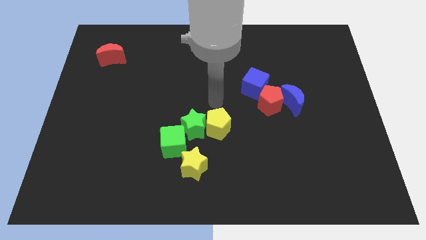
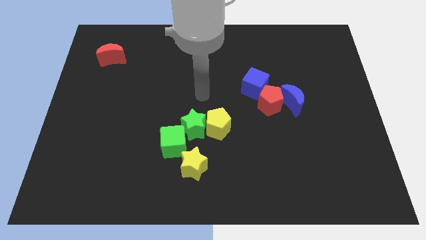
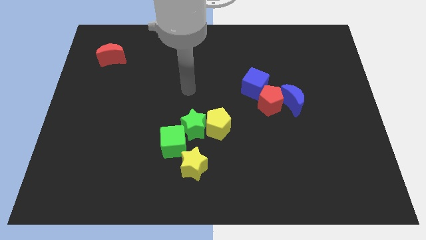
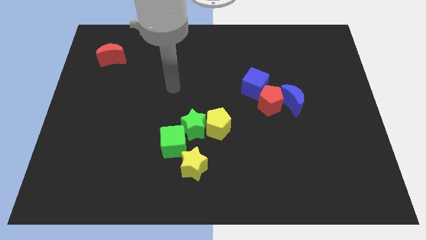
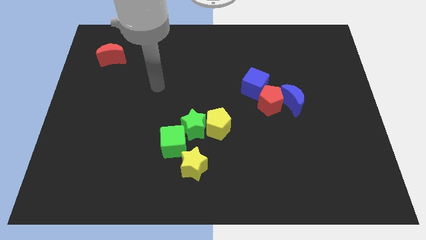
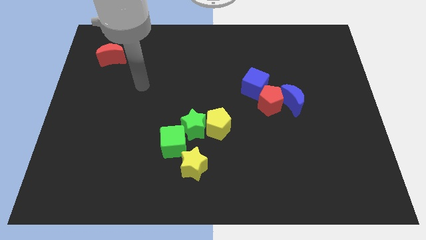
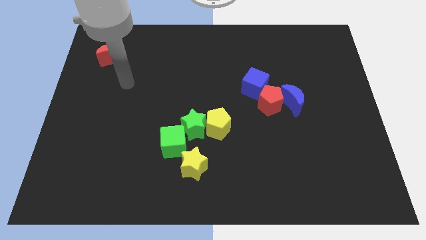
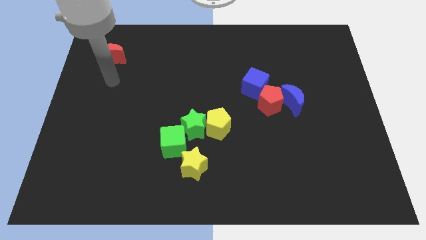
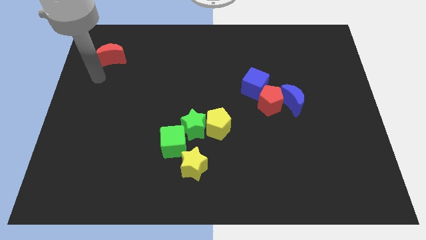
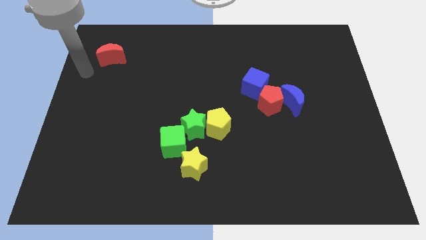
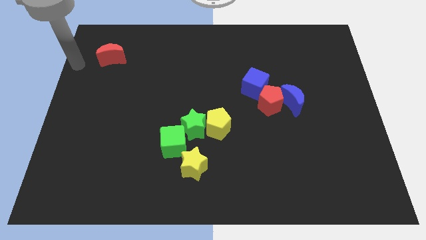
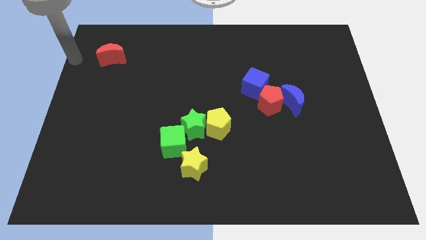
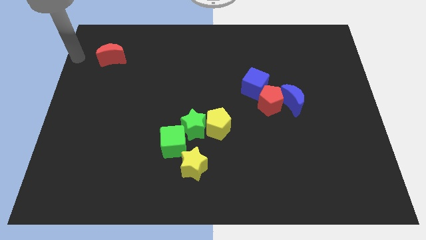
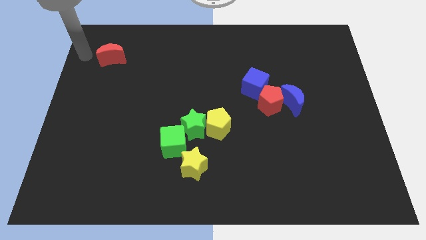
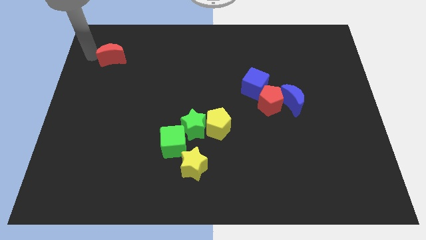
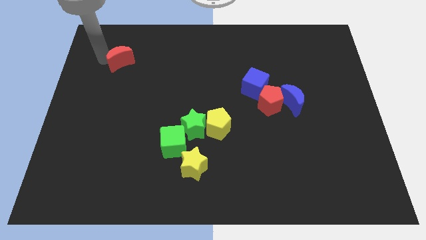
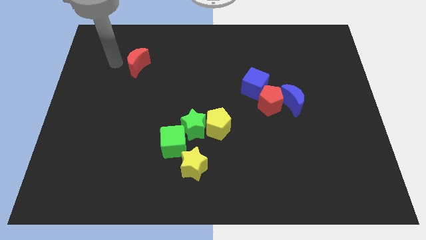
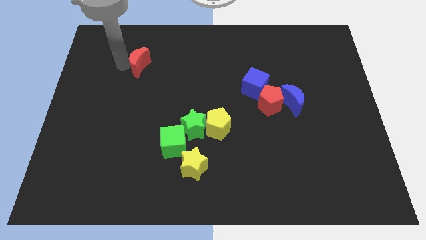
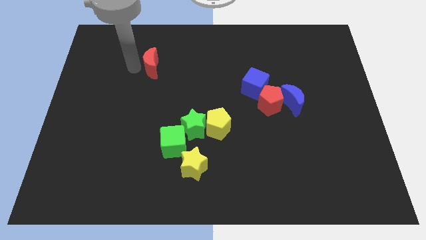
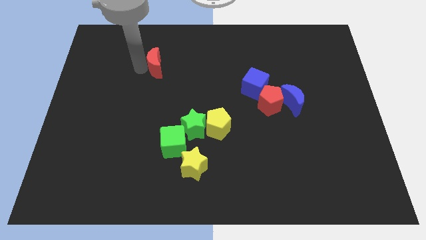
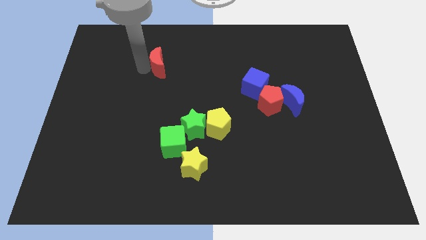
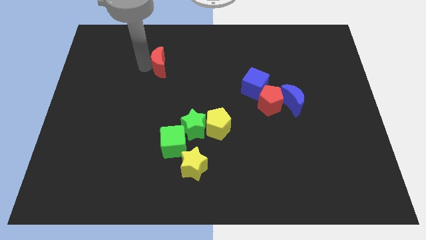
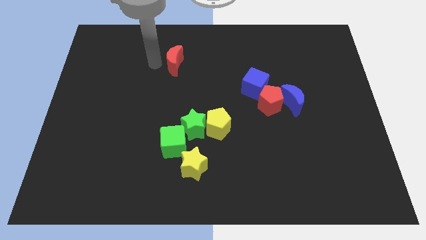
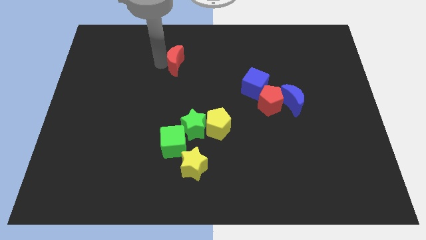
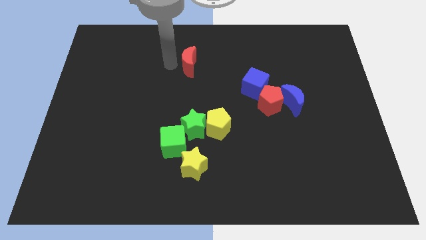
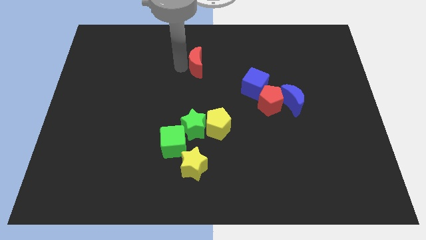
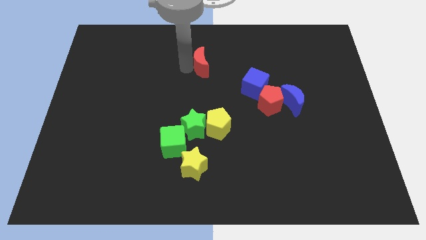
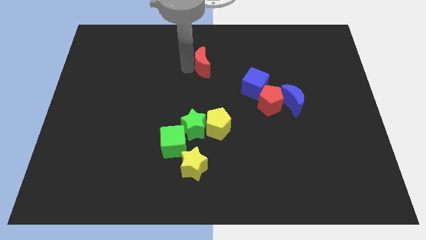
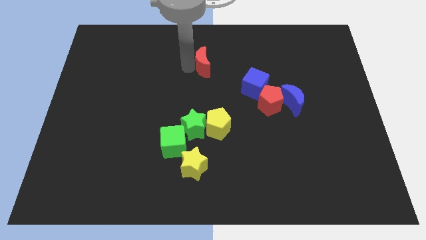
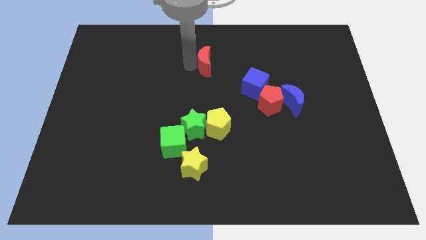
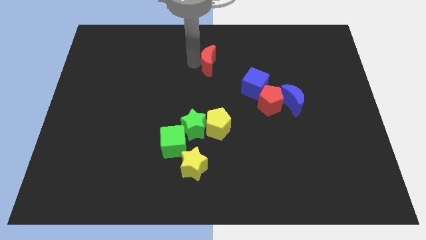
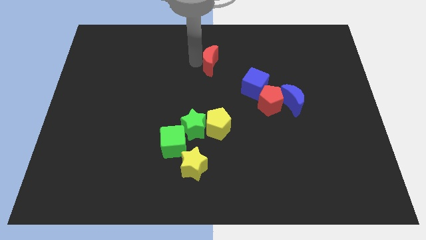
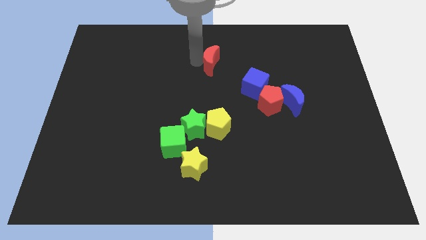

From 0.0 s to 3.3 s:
put the red moon diagonally top right to the green star

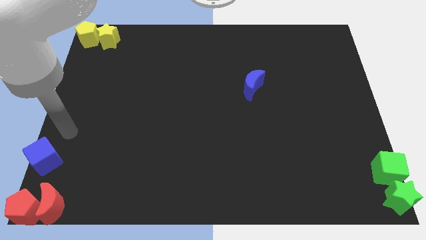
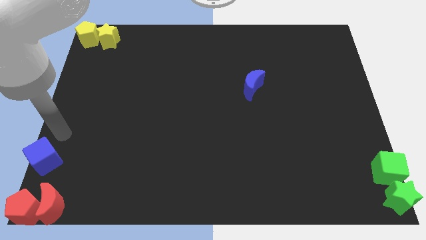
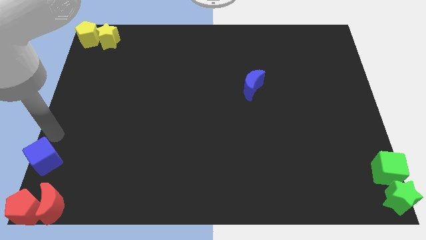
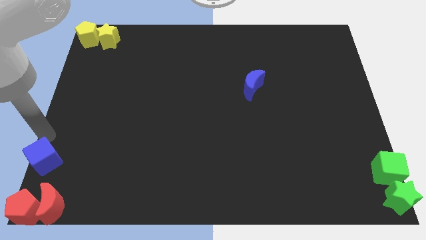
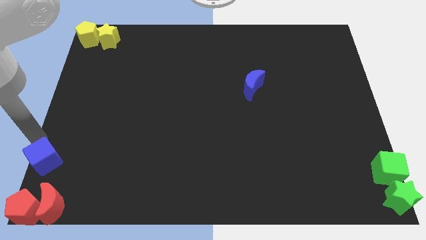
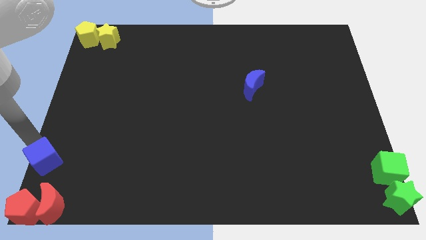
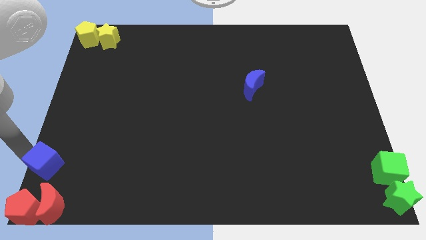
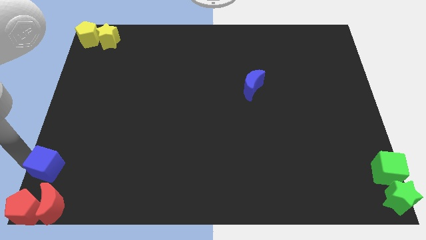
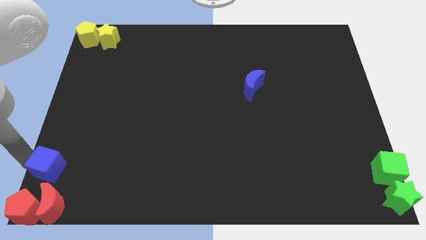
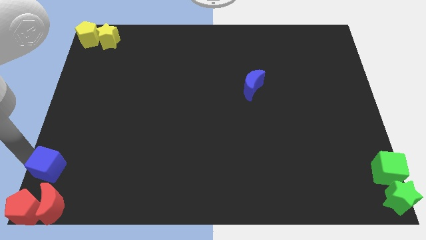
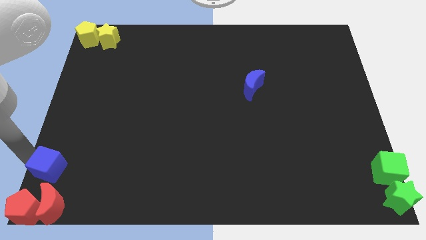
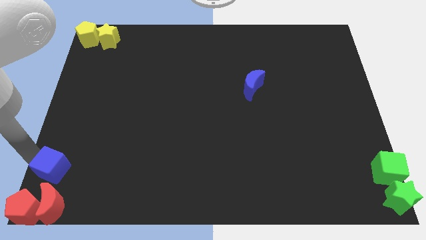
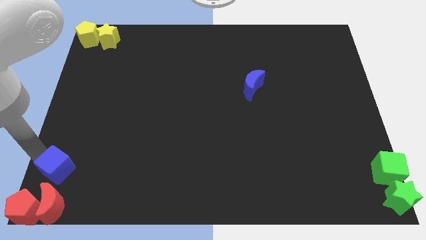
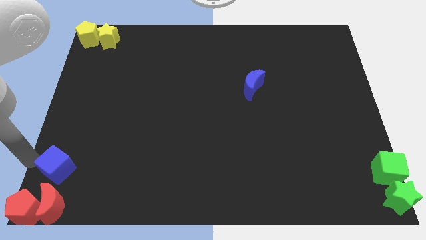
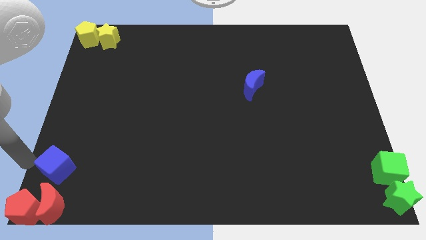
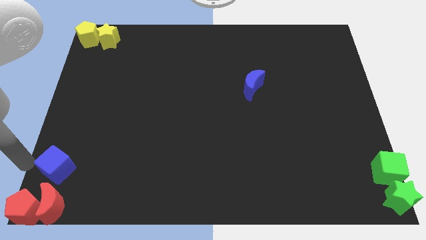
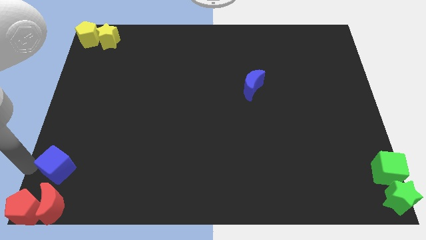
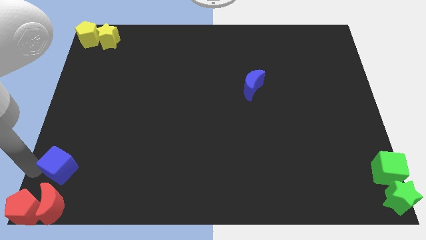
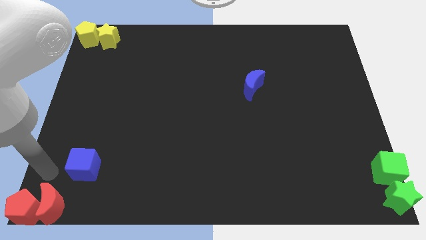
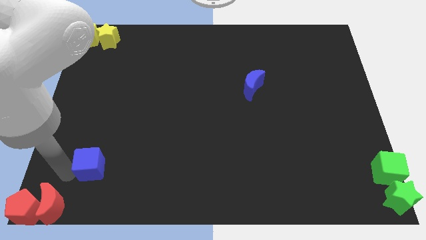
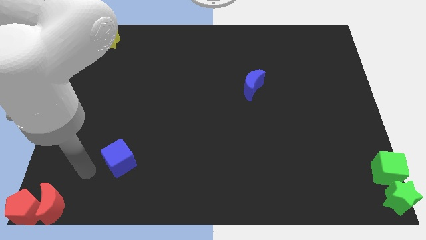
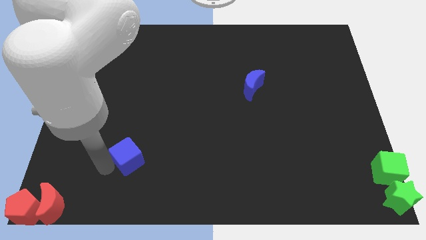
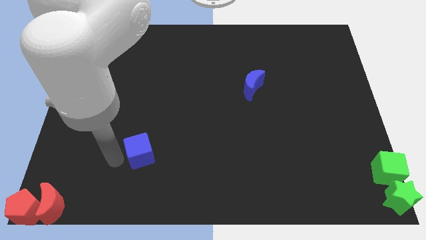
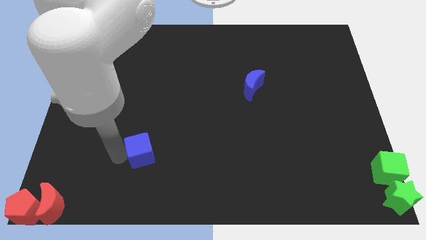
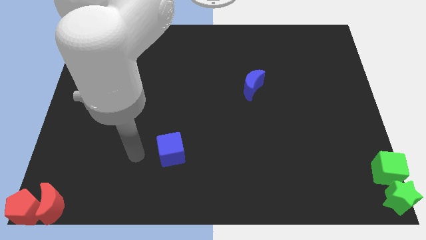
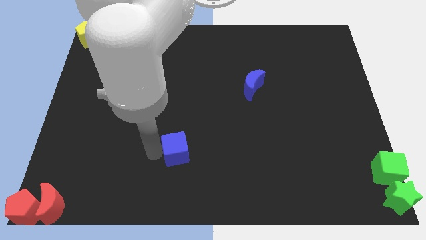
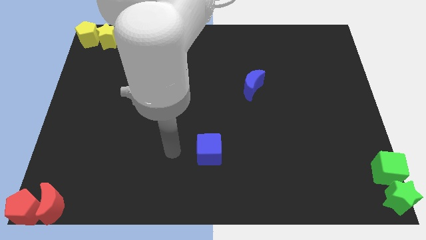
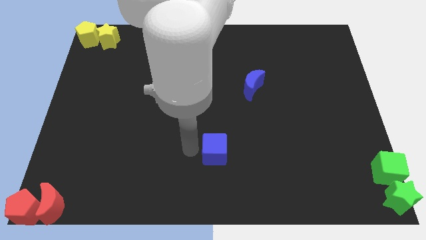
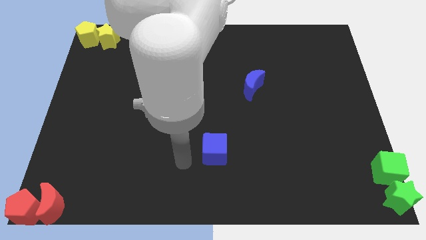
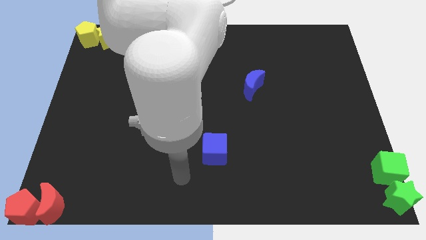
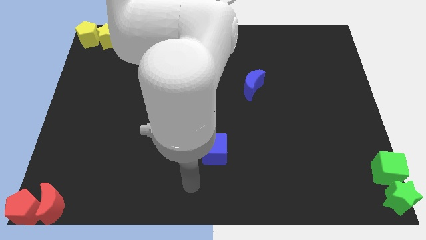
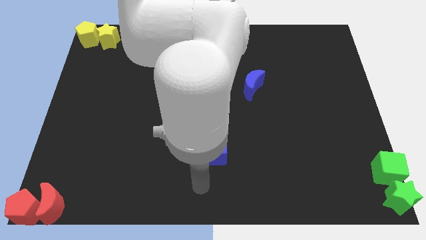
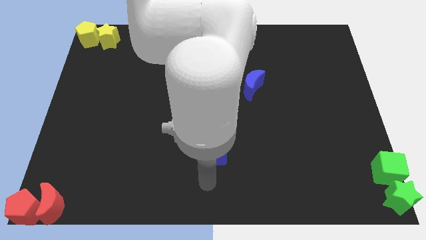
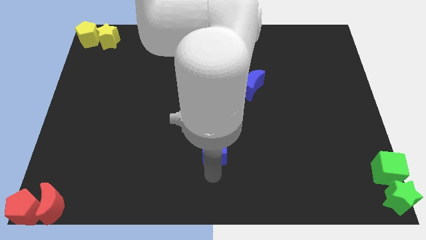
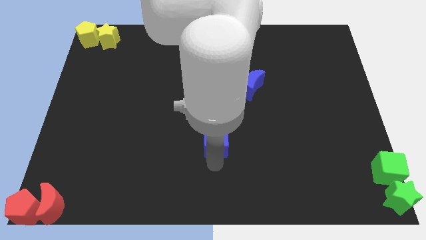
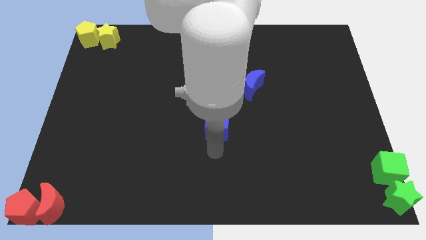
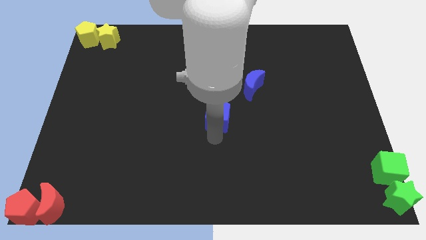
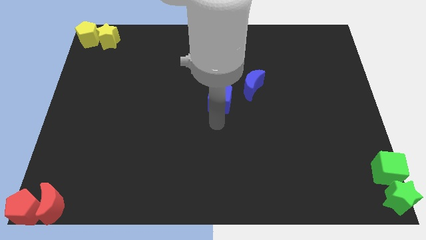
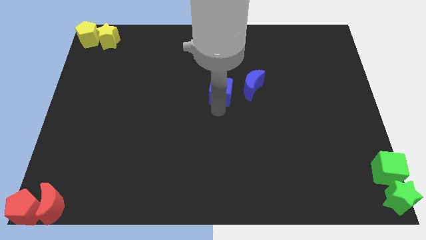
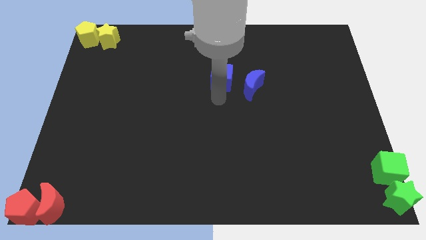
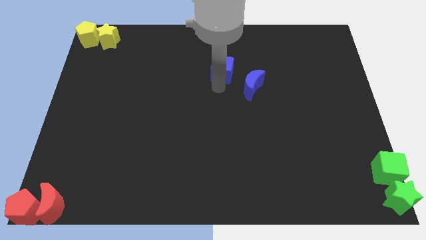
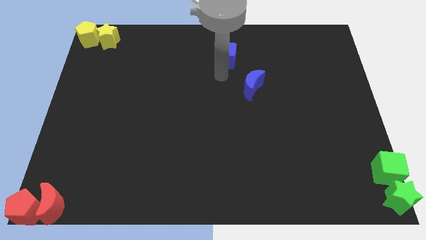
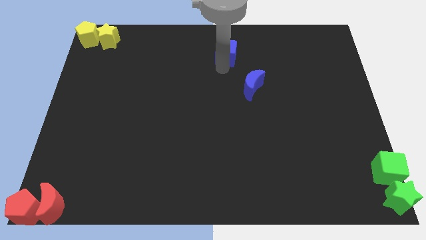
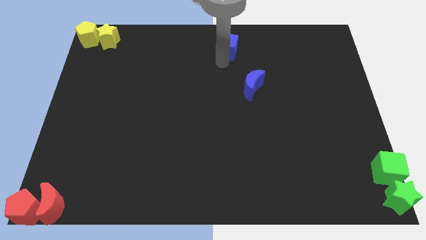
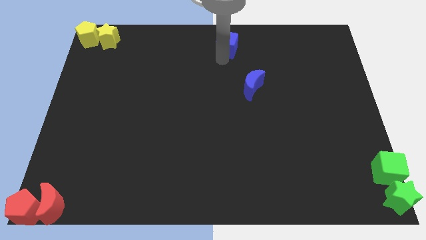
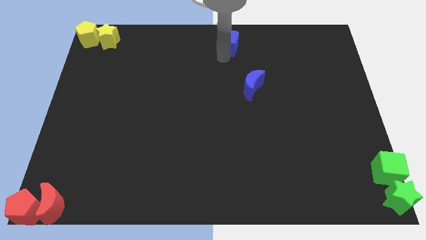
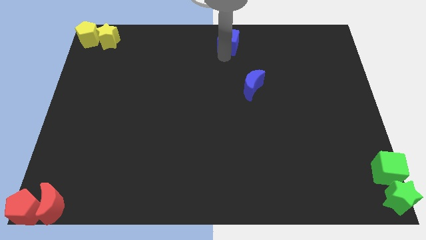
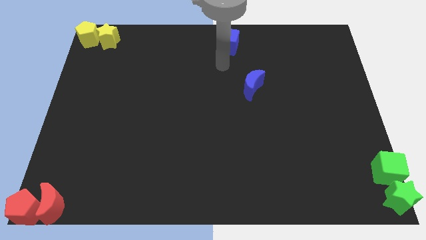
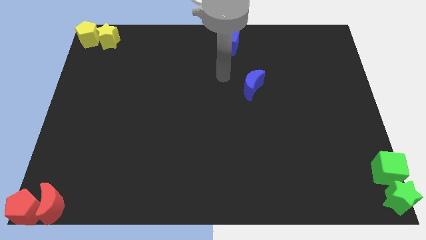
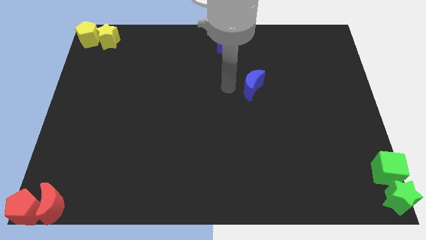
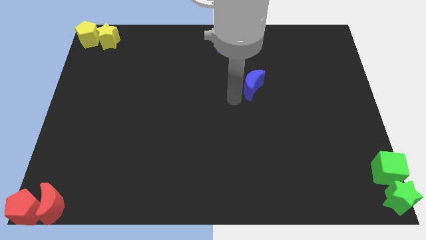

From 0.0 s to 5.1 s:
push the blue cube to the top center of the board

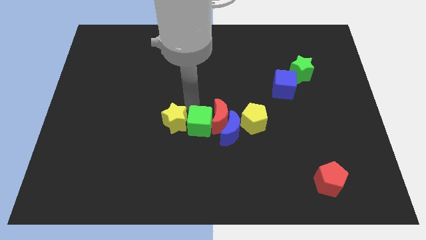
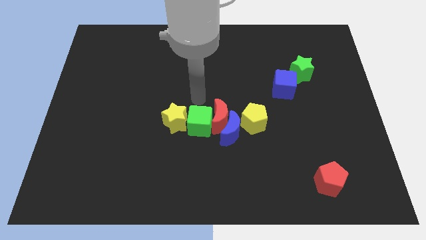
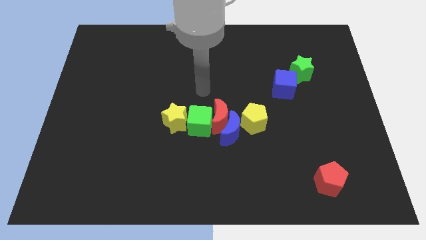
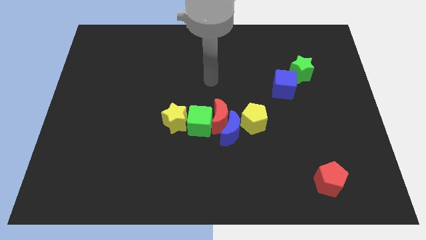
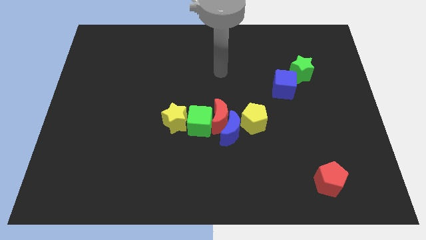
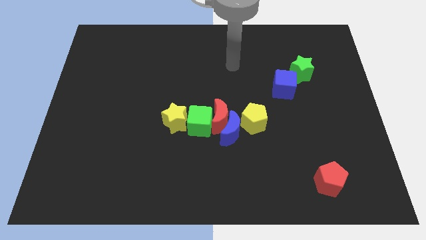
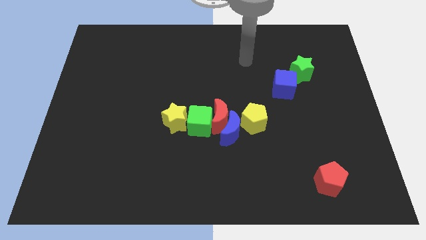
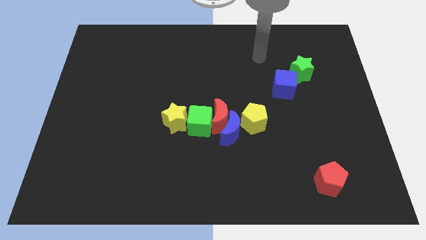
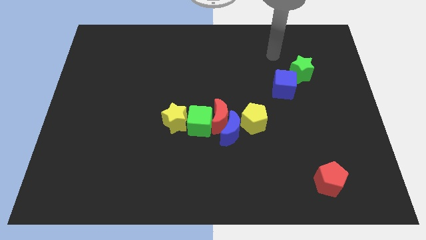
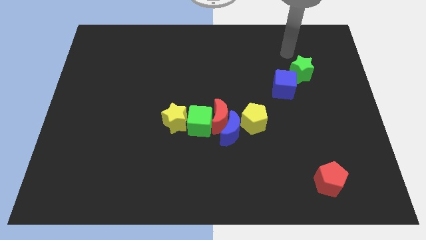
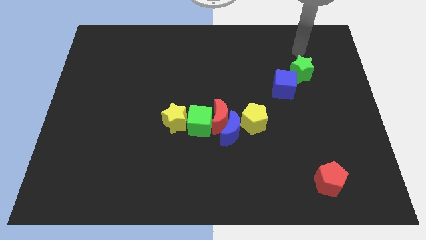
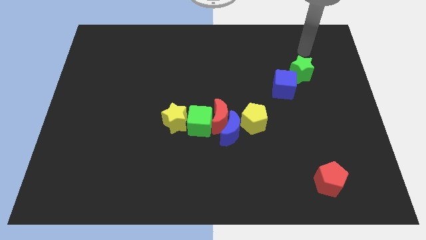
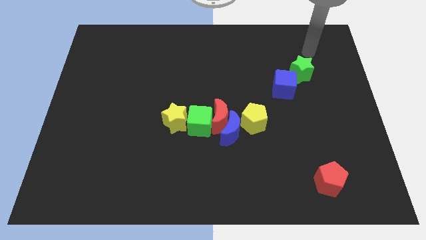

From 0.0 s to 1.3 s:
point your arm at the top of green star
